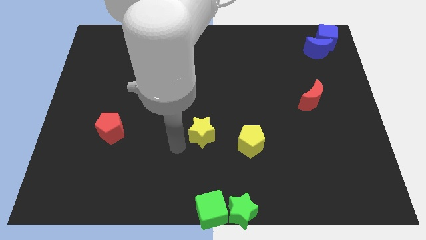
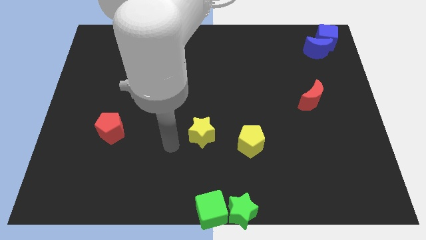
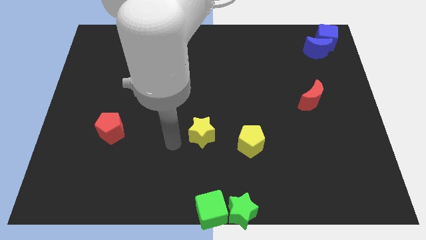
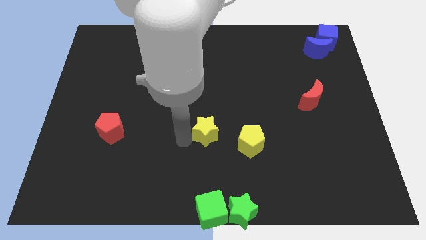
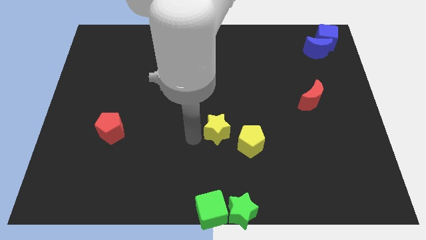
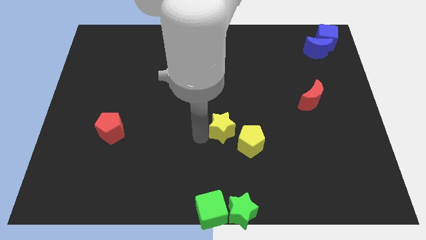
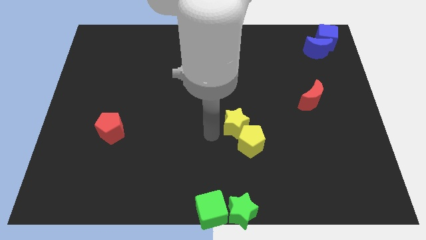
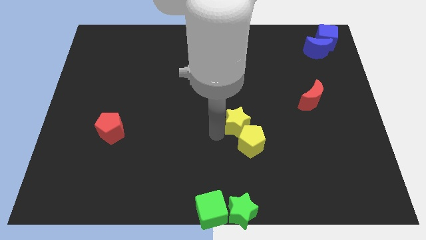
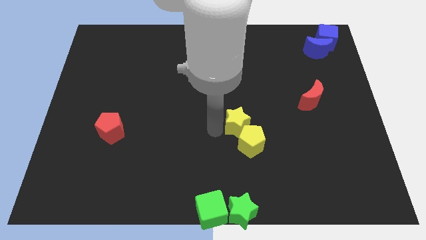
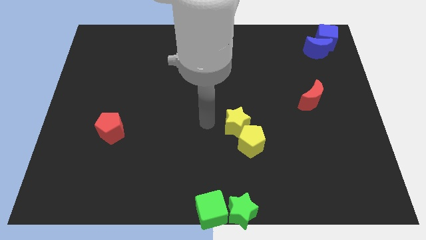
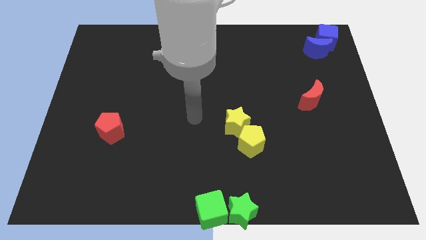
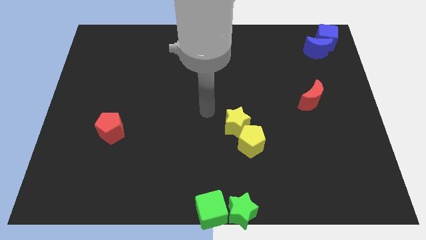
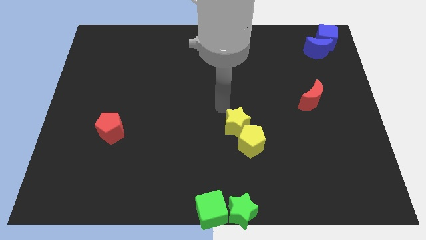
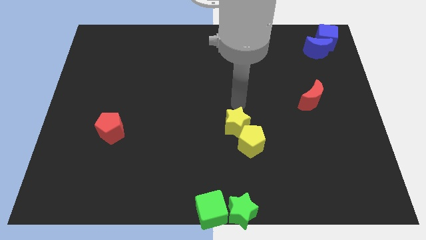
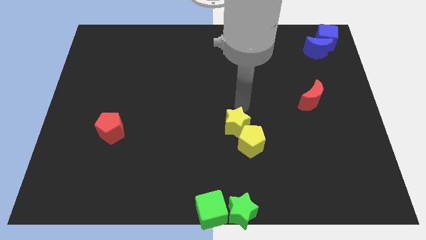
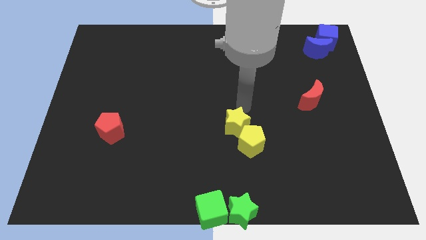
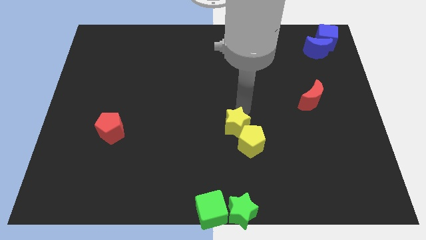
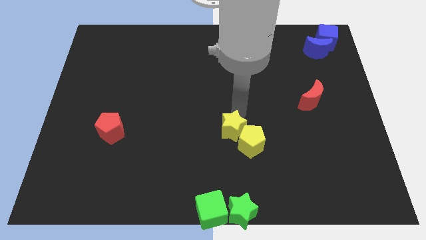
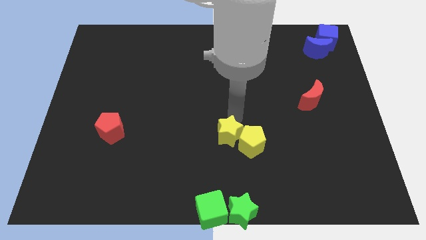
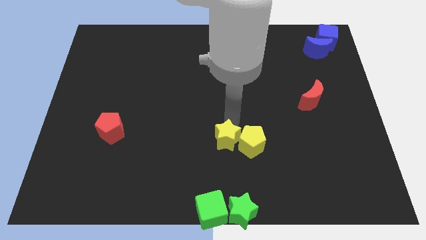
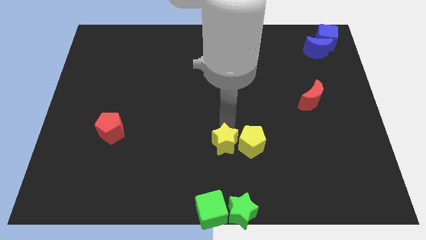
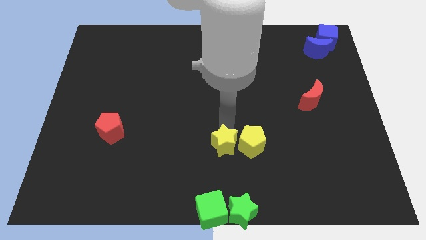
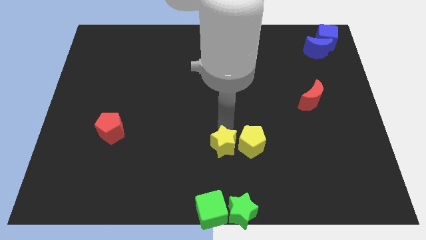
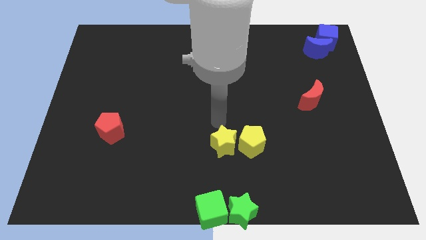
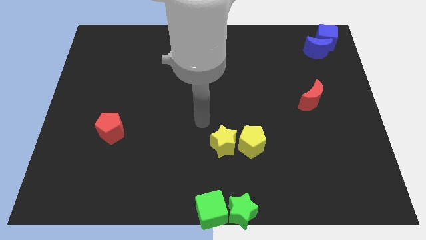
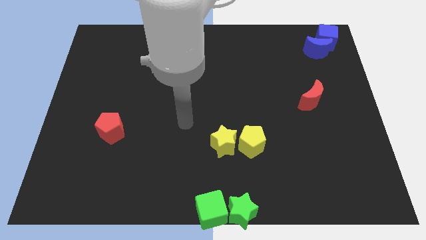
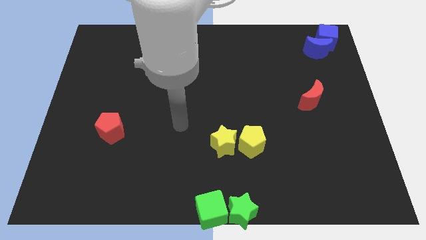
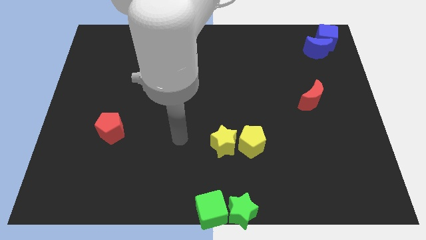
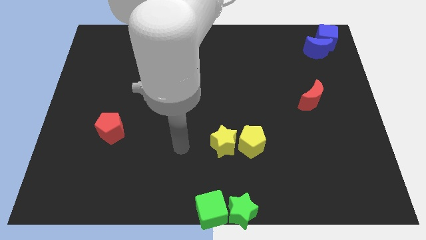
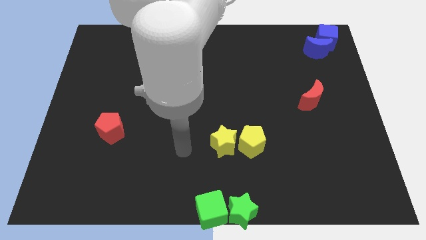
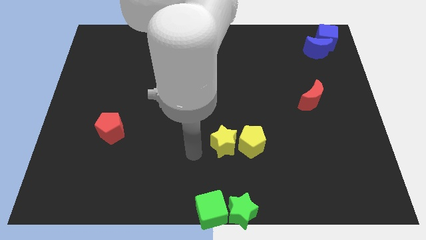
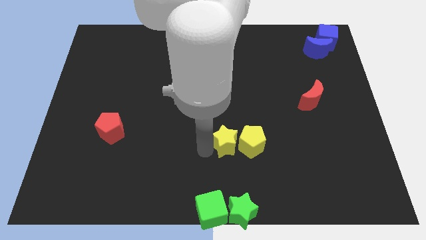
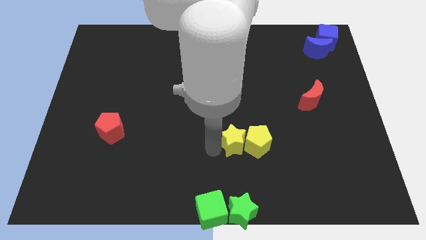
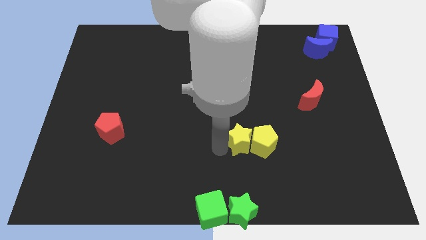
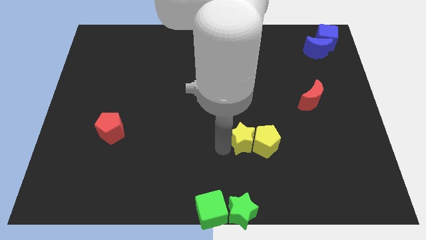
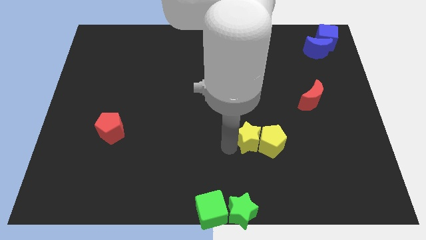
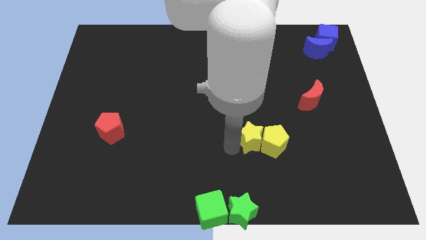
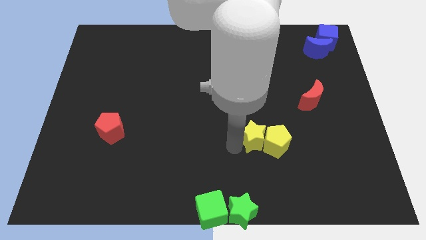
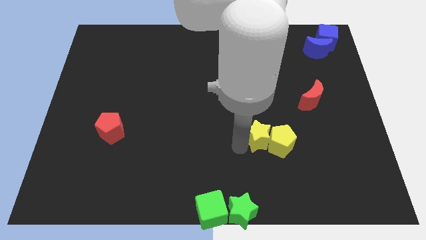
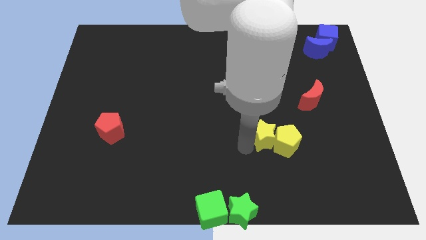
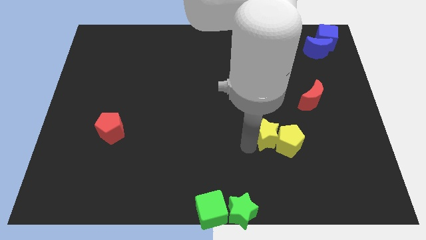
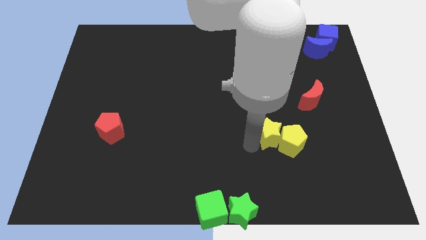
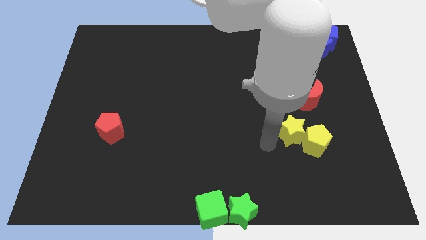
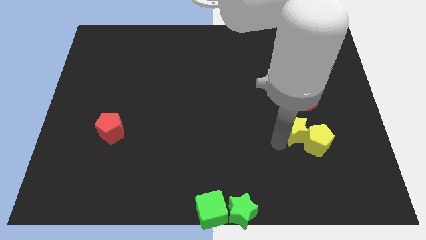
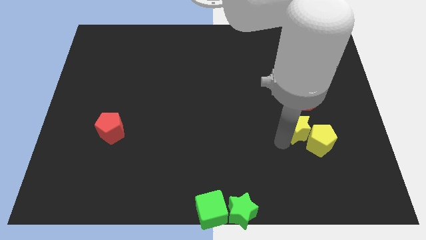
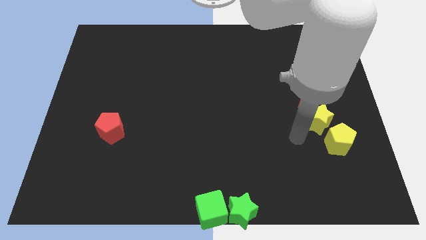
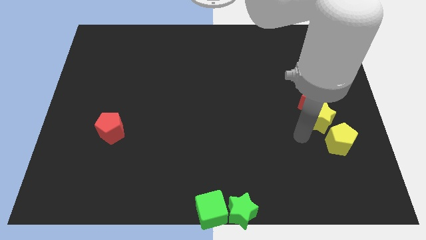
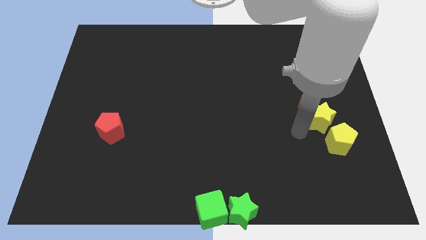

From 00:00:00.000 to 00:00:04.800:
push yellow star in between yellow pentagon and red crescent

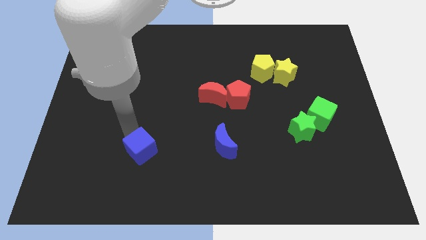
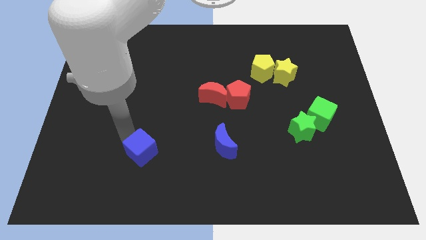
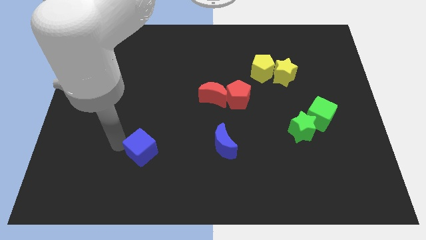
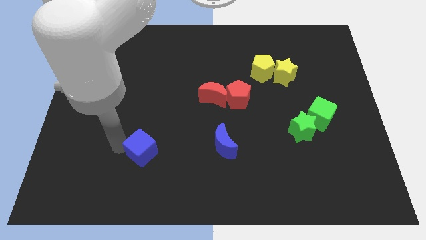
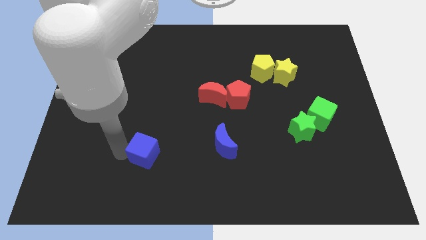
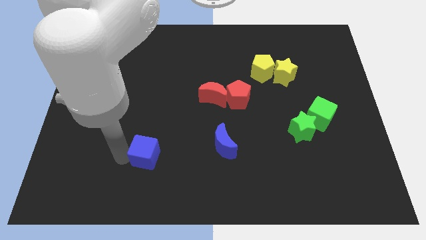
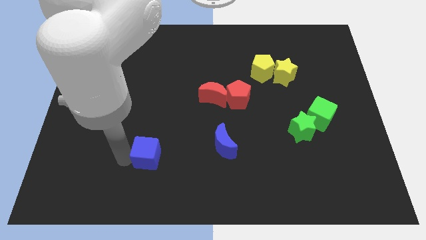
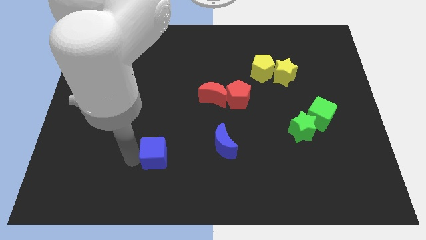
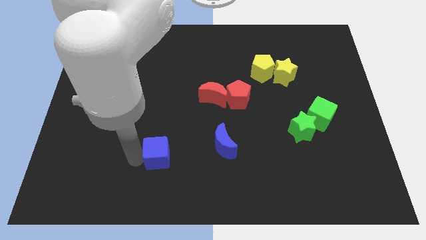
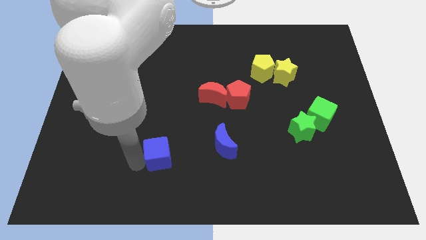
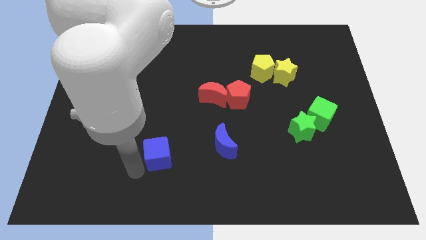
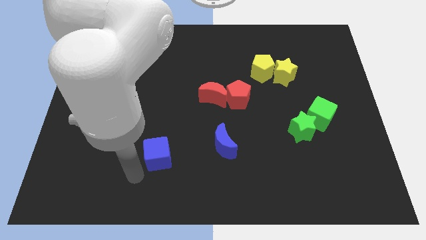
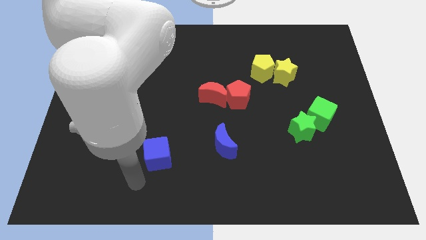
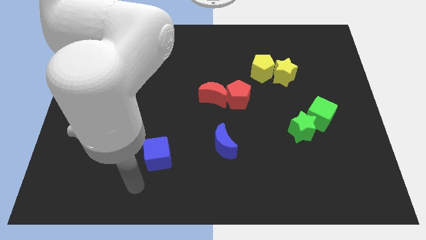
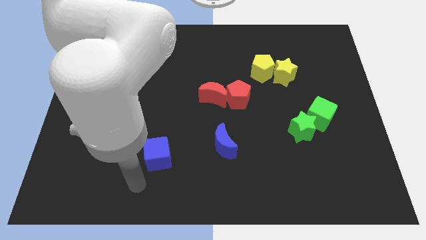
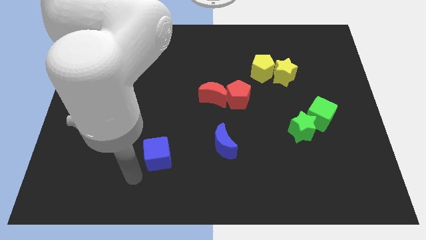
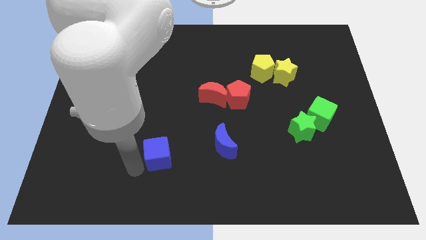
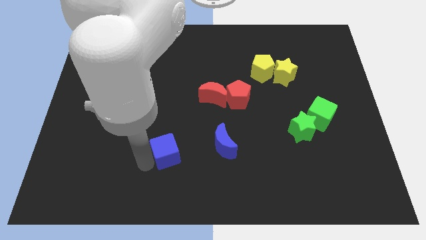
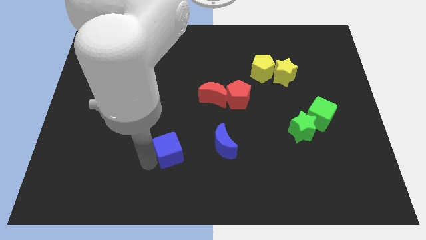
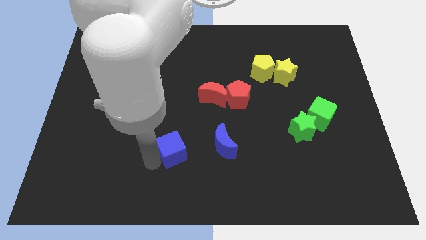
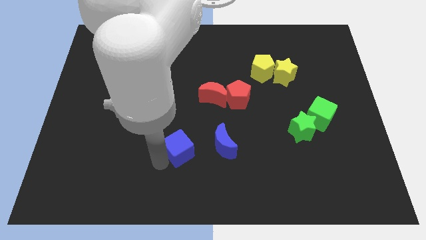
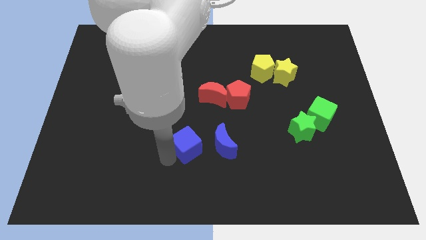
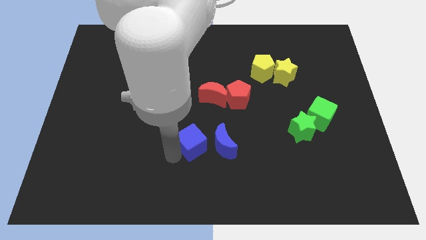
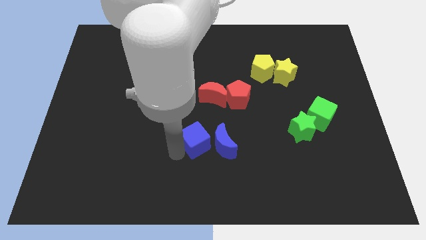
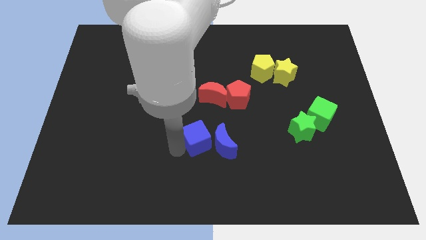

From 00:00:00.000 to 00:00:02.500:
place the blue cube to the left side of blue moon

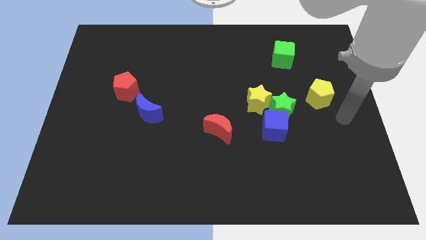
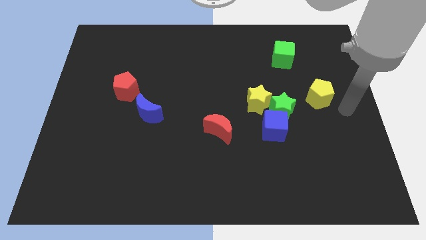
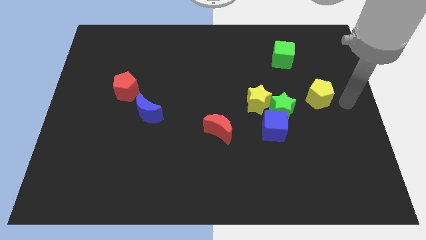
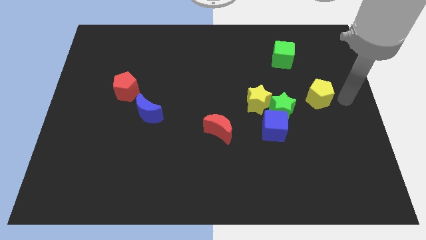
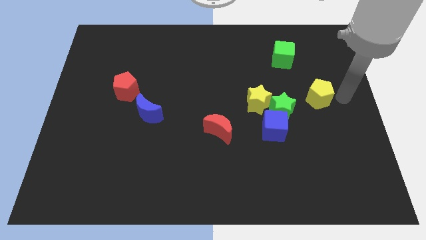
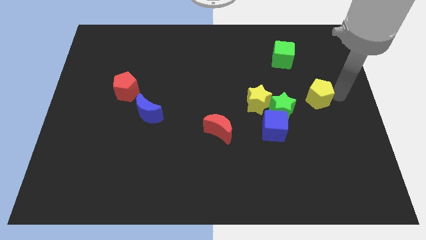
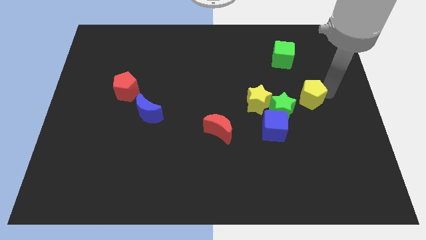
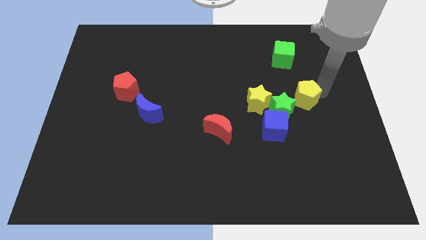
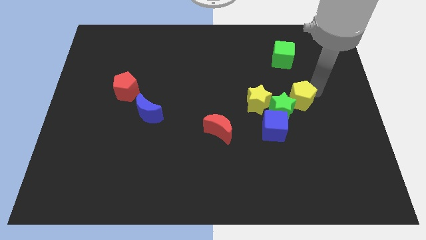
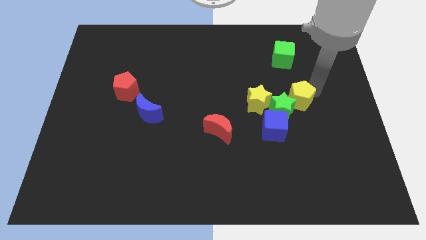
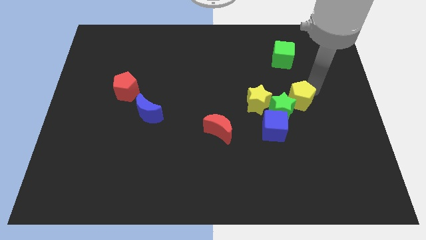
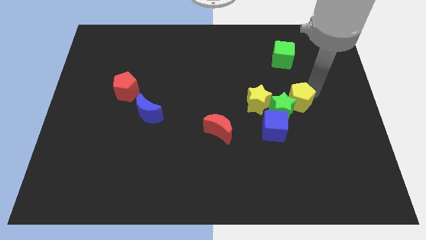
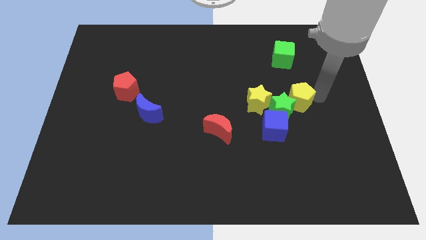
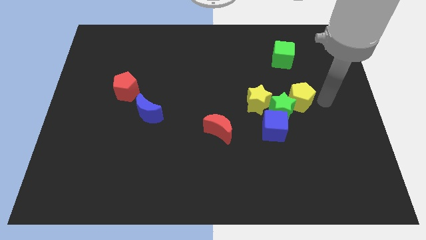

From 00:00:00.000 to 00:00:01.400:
move yellow pentagon right above the green star

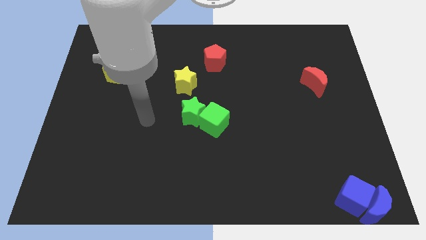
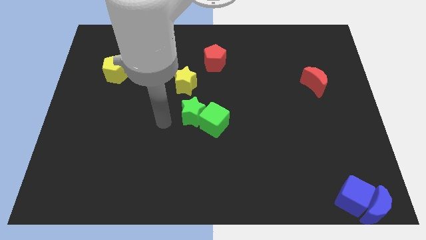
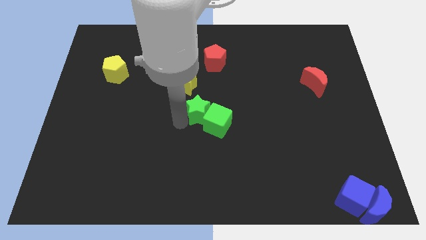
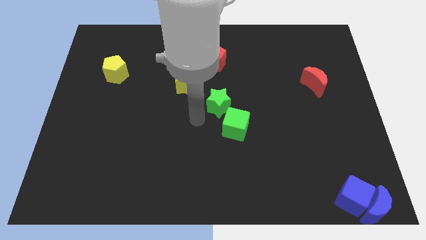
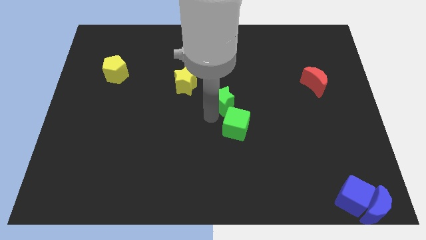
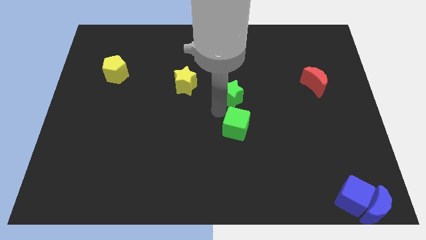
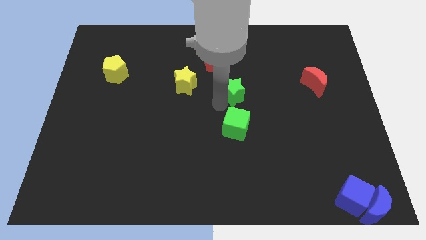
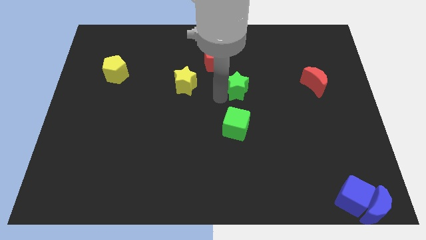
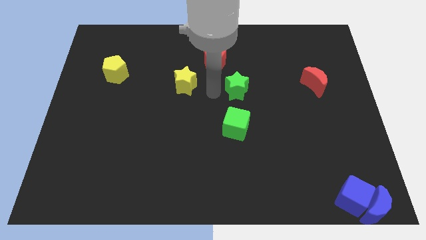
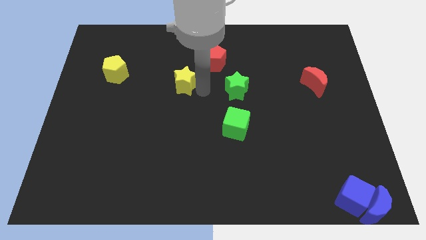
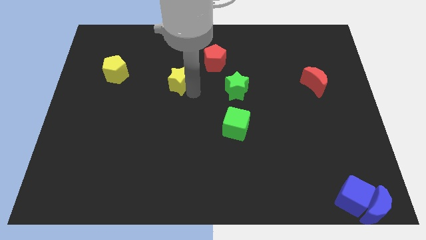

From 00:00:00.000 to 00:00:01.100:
separate the green star from the green cube
